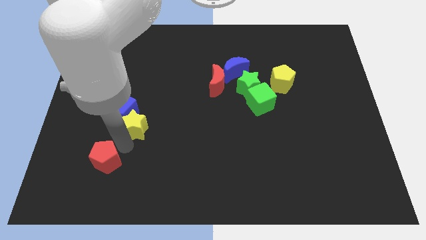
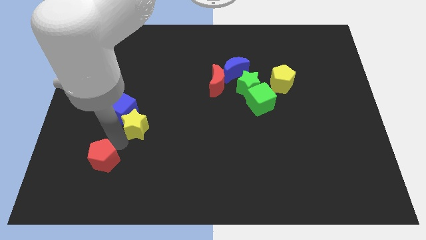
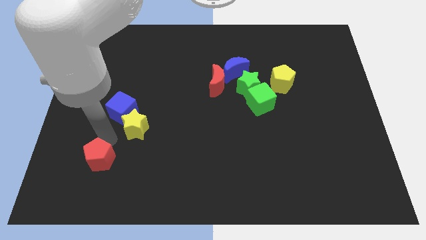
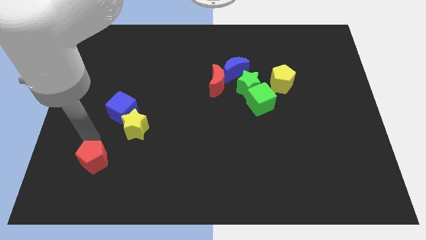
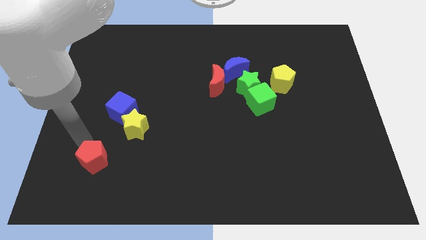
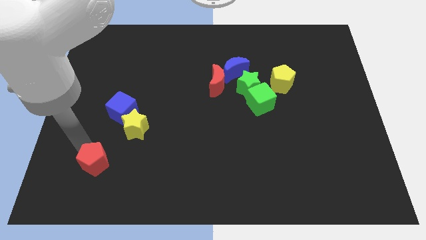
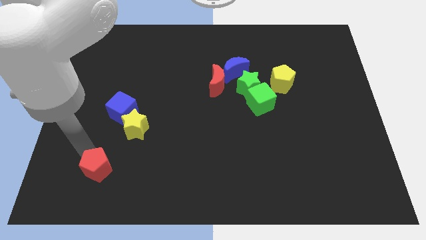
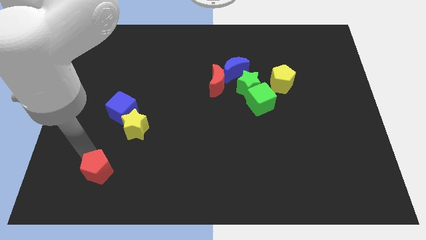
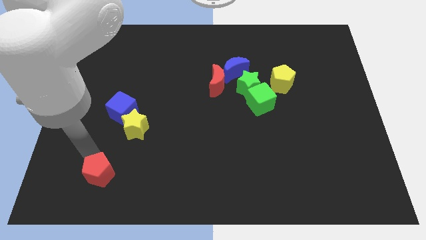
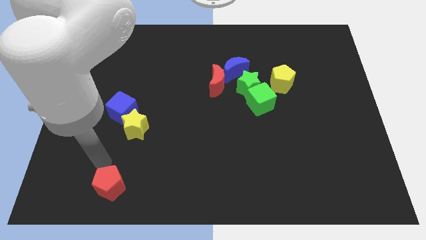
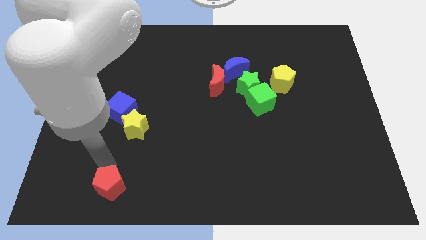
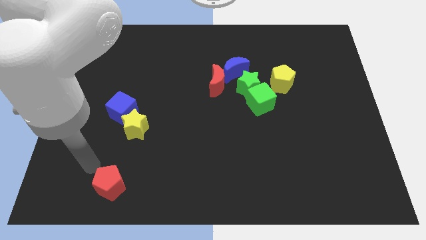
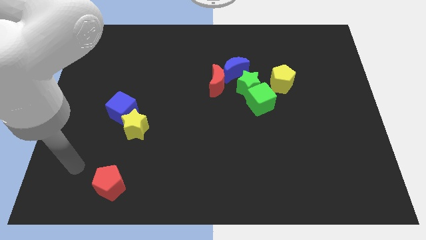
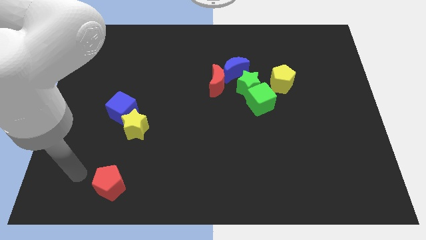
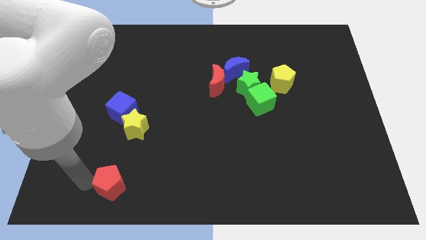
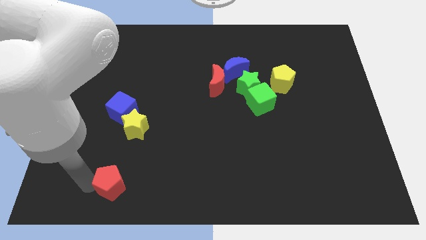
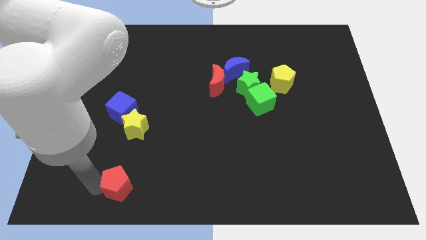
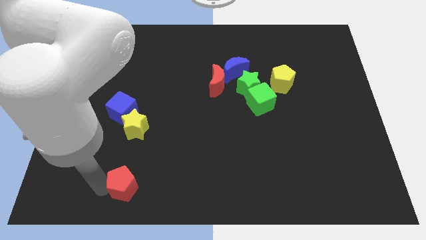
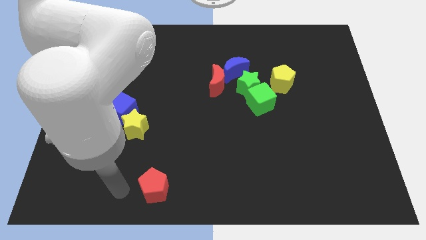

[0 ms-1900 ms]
move the red pentagon to the bottom of the yellow star

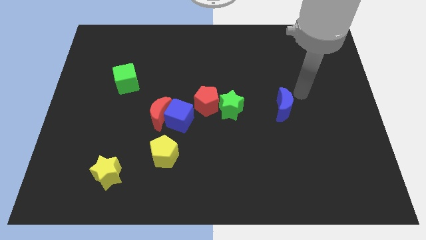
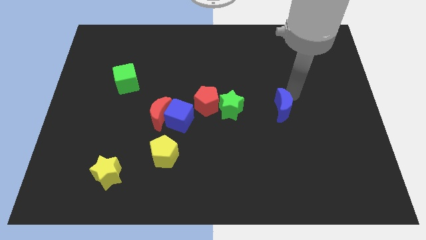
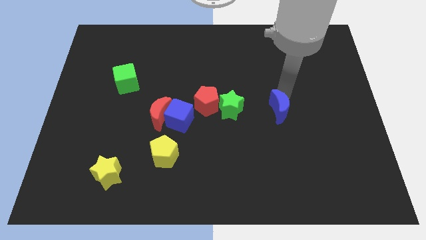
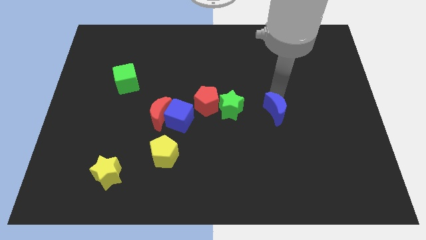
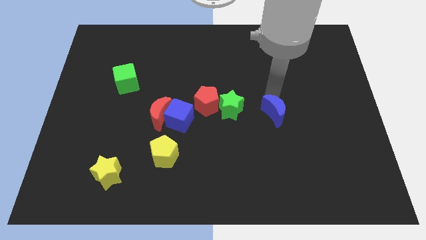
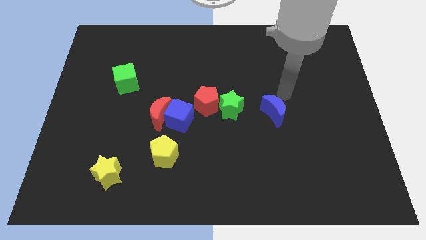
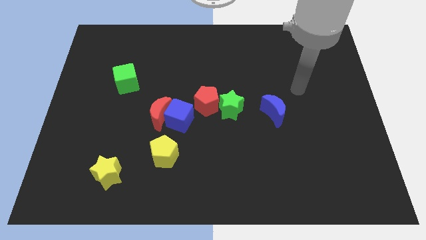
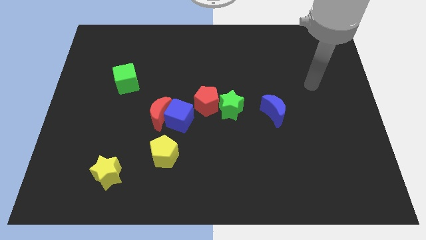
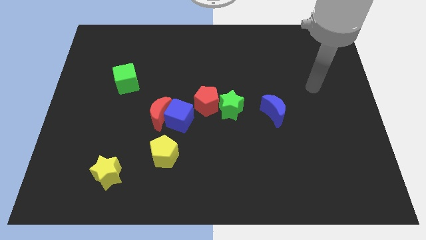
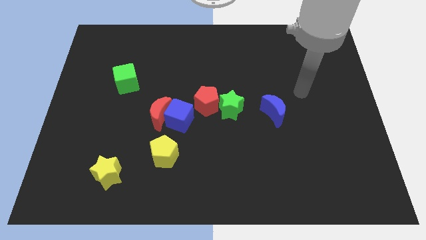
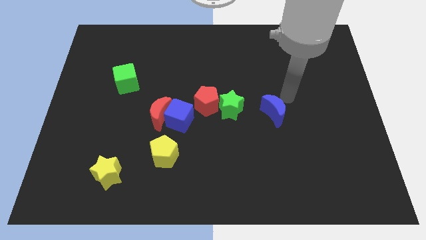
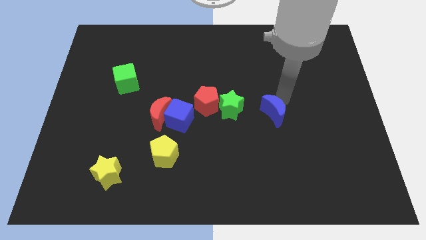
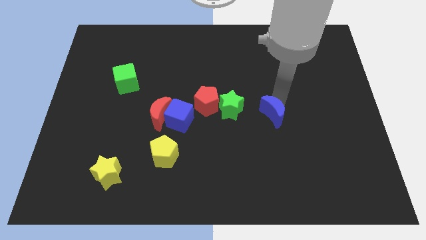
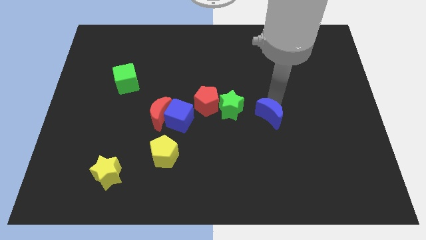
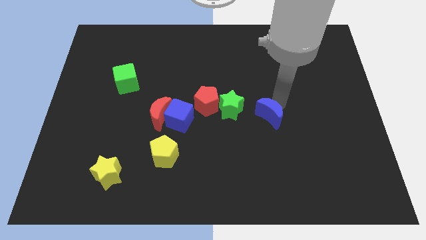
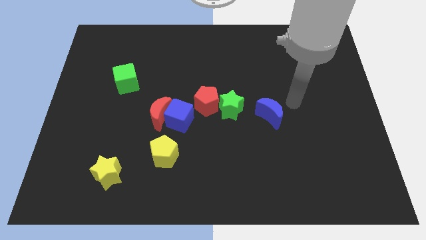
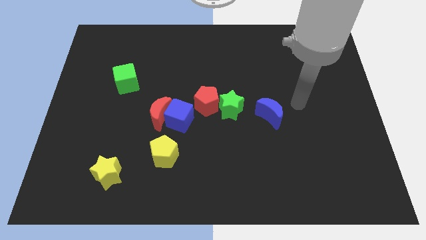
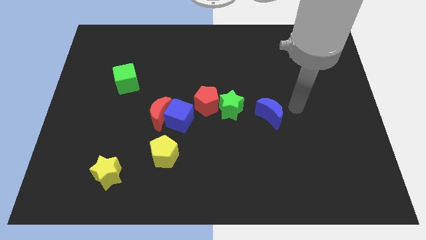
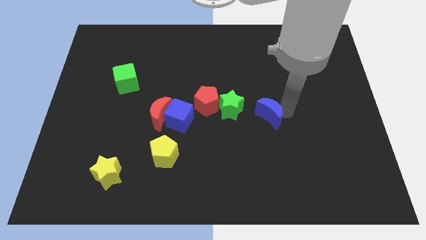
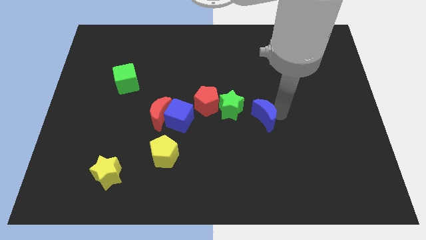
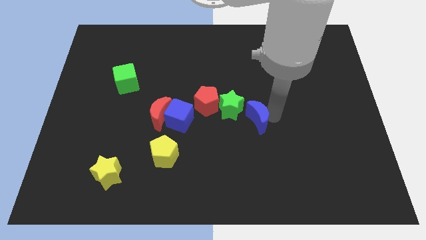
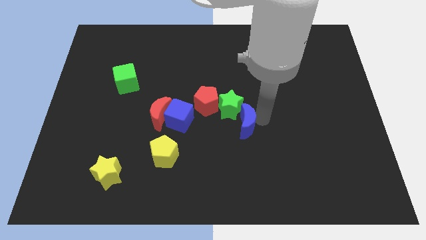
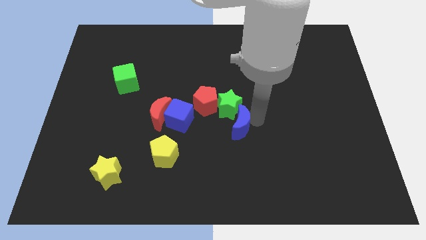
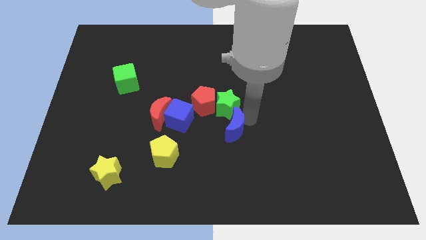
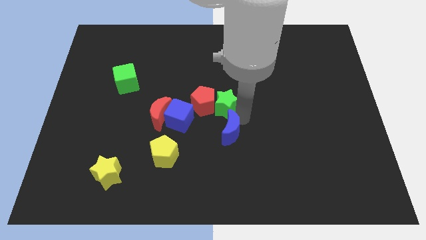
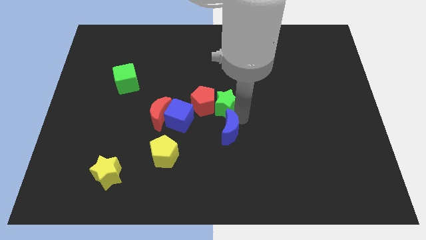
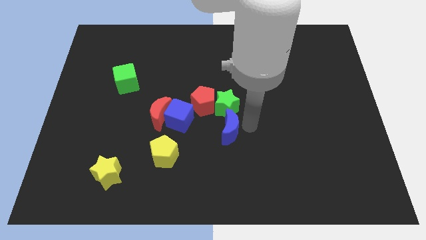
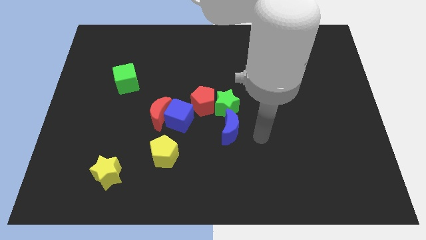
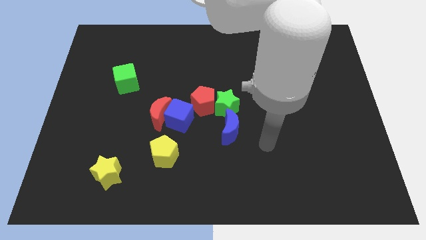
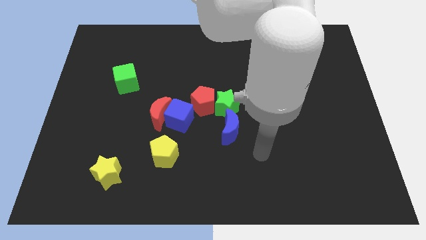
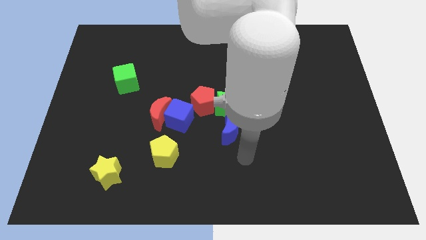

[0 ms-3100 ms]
move the blue crescent to the bottom of the green star

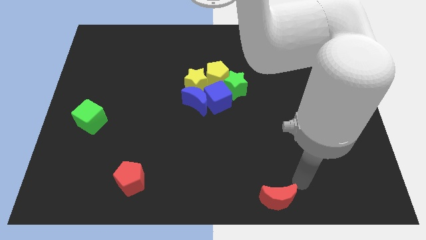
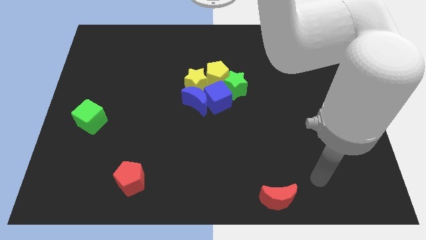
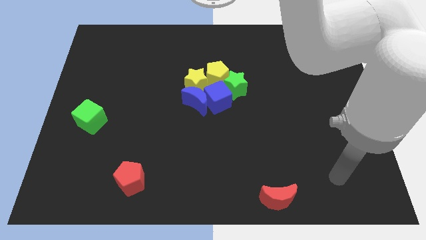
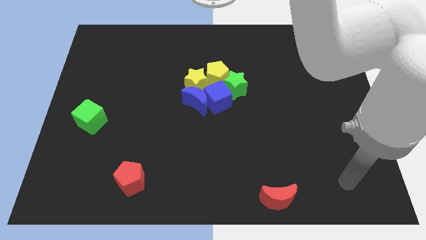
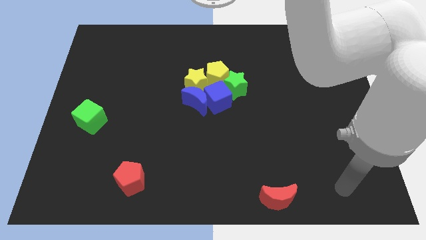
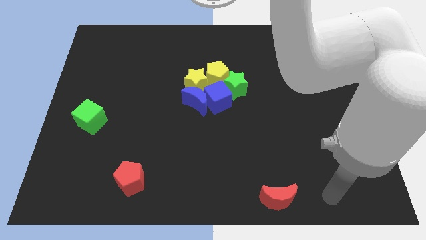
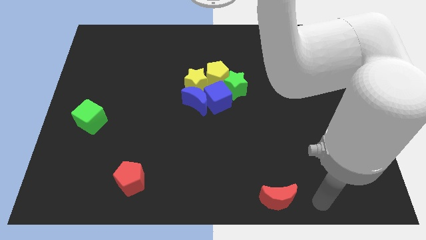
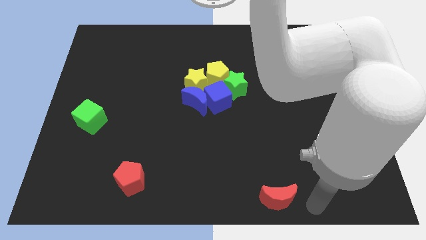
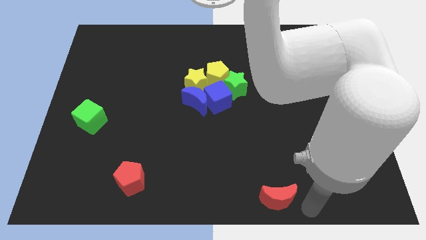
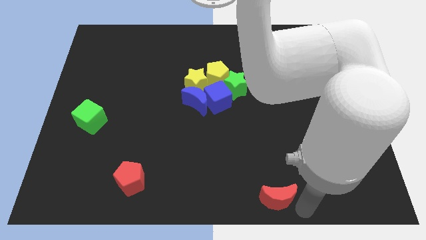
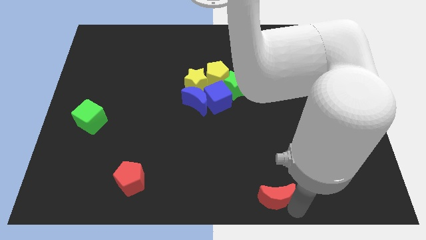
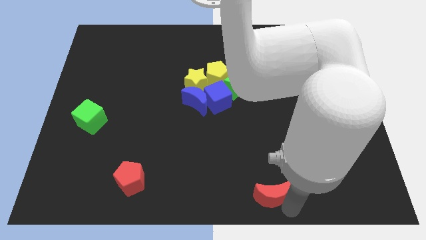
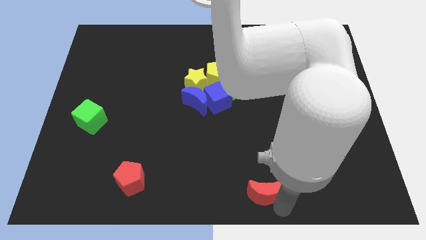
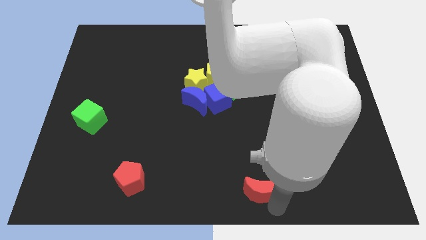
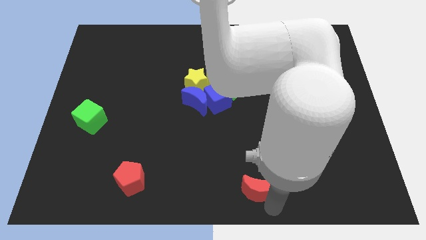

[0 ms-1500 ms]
slide the red moon towards the bottom center of the board

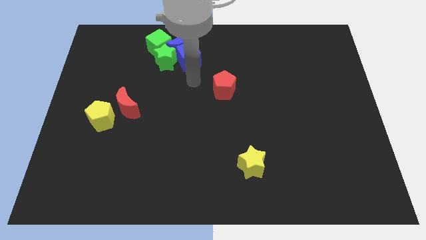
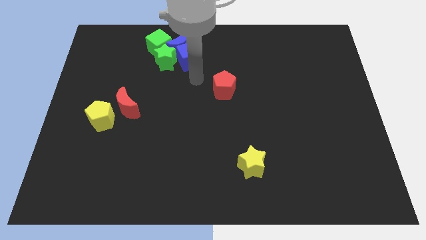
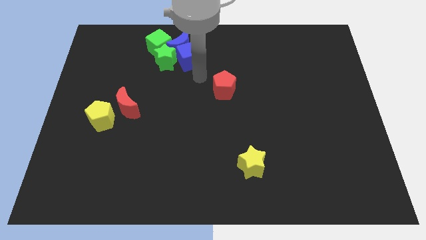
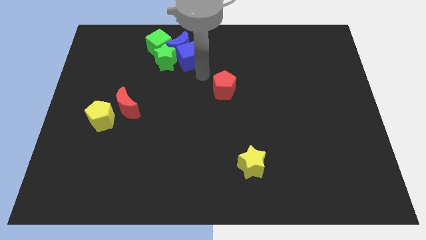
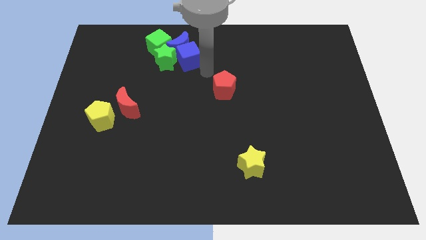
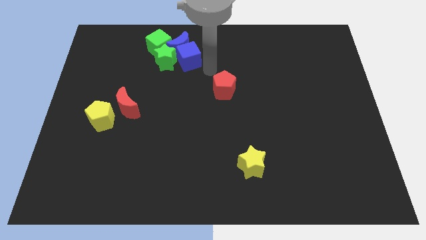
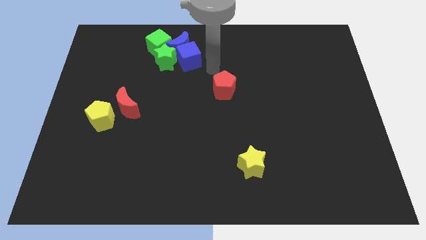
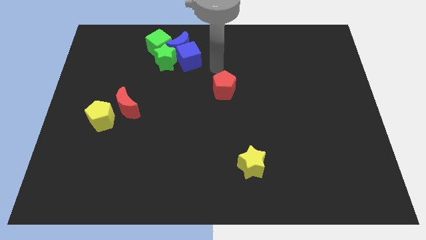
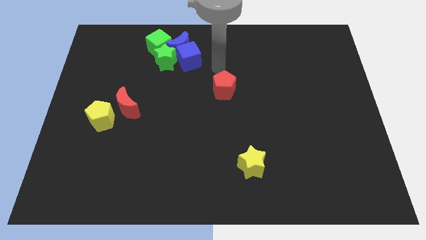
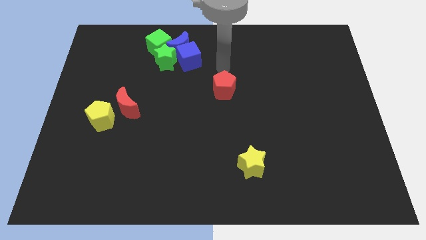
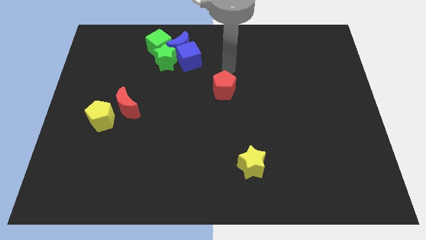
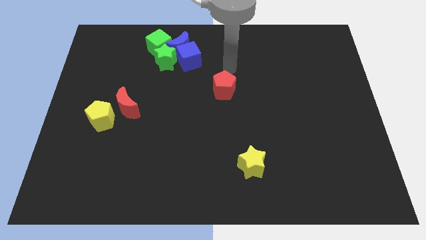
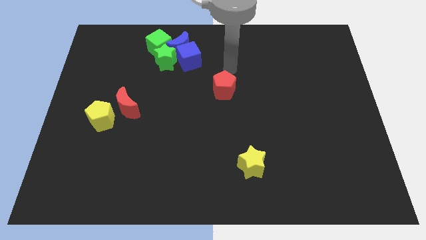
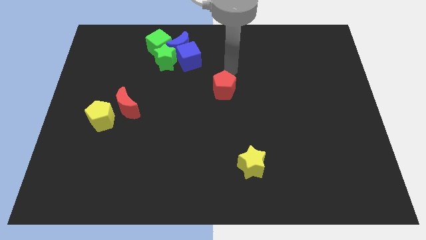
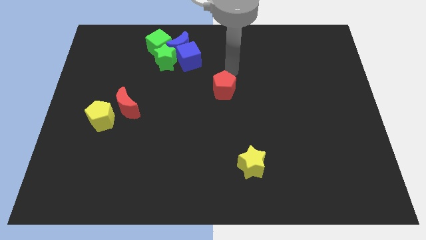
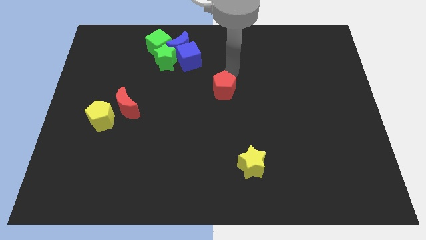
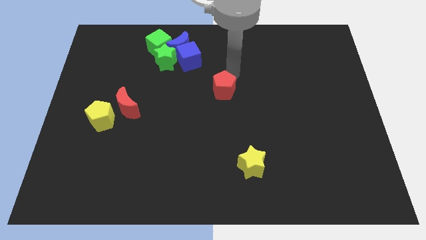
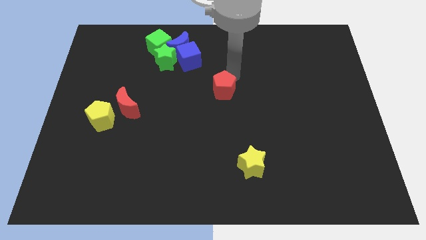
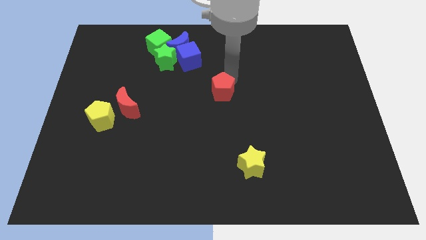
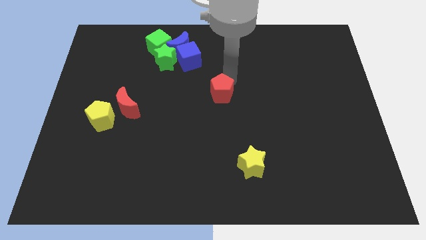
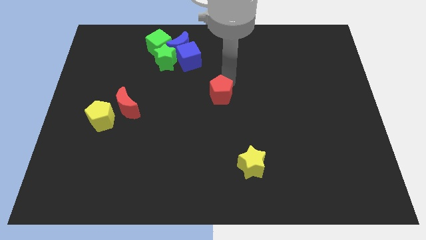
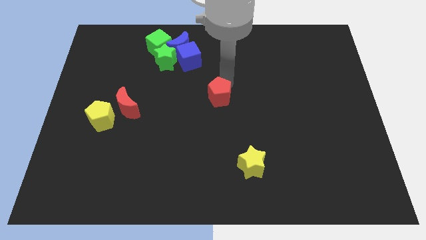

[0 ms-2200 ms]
slightly push the red pentagon downwards

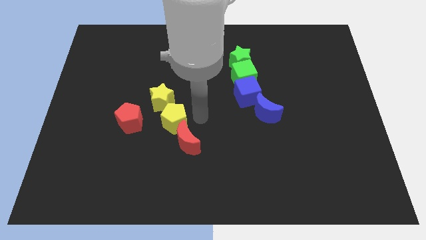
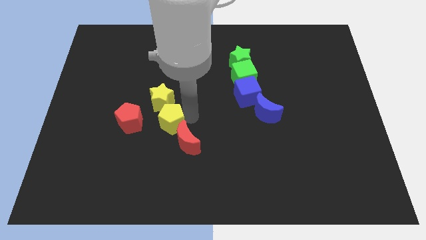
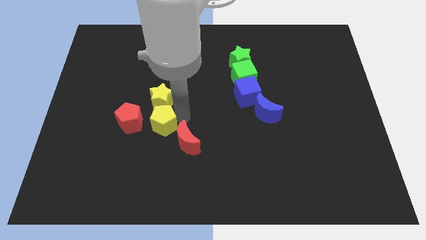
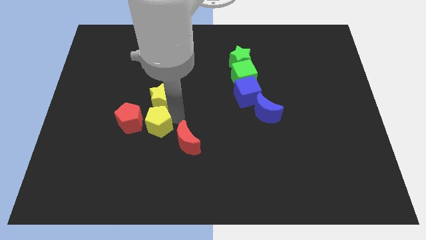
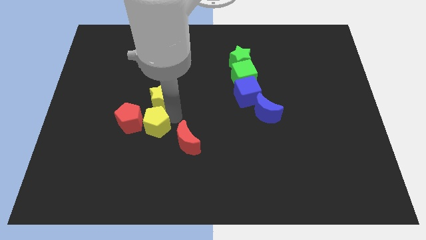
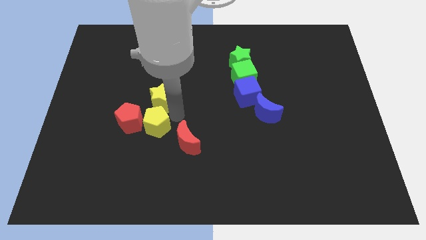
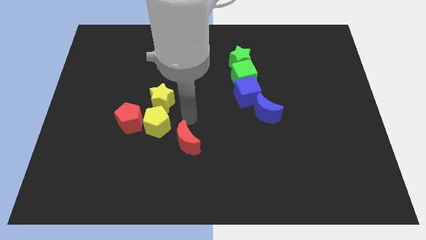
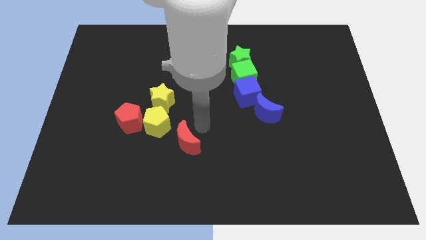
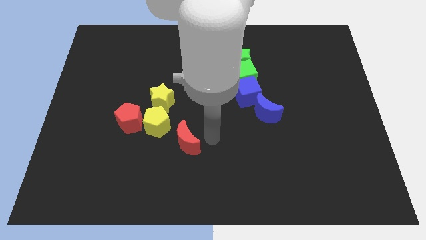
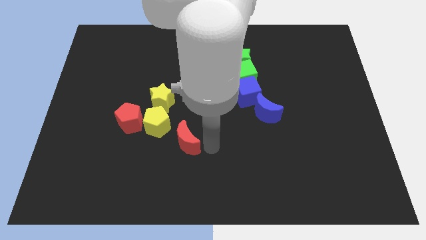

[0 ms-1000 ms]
point your arm right to the red moon
